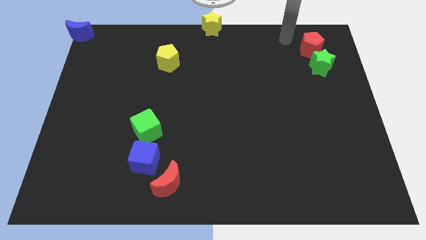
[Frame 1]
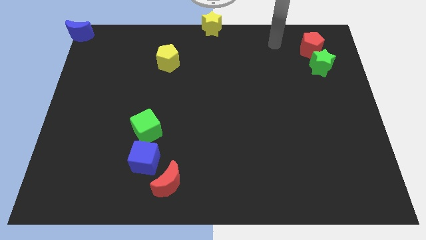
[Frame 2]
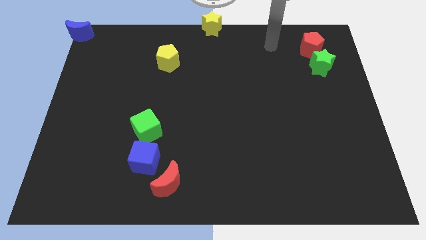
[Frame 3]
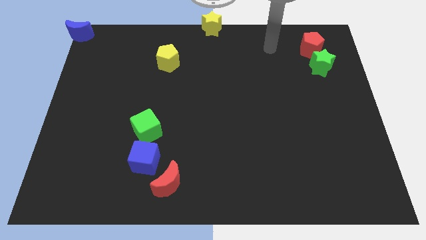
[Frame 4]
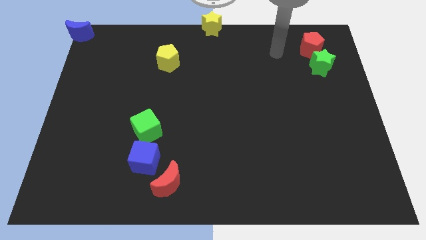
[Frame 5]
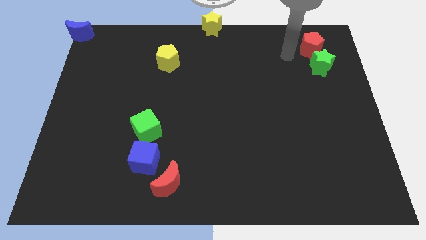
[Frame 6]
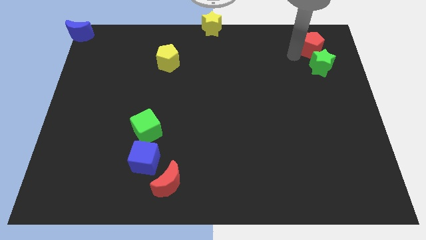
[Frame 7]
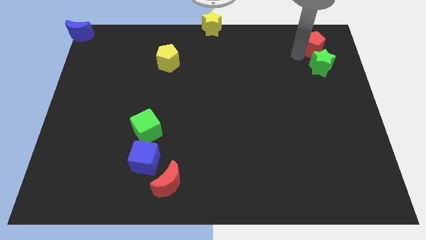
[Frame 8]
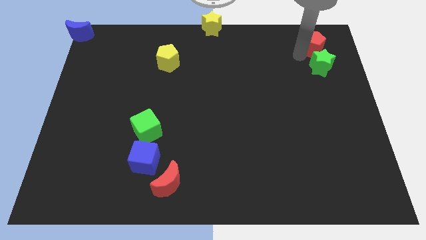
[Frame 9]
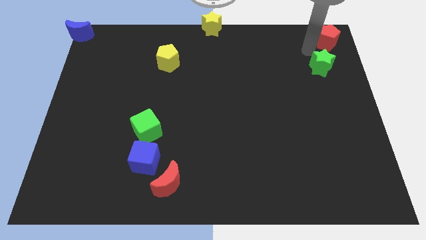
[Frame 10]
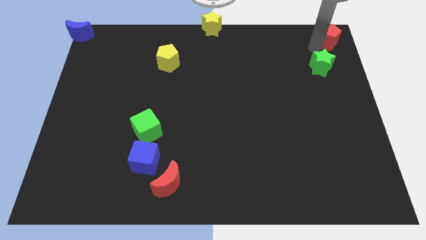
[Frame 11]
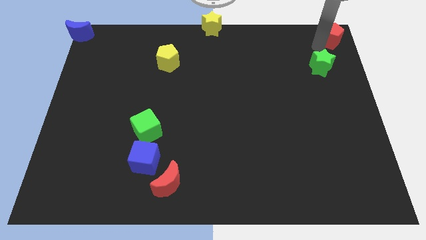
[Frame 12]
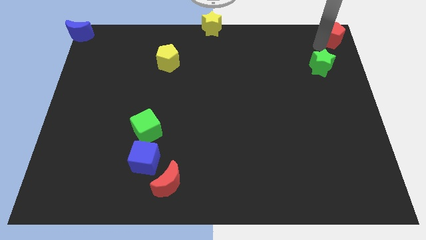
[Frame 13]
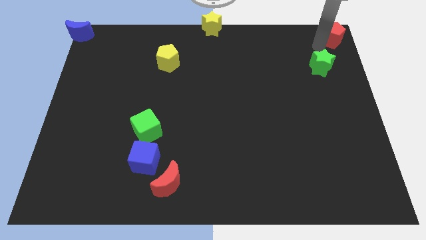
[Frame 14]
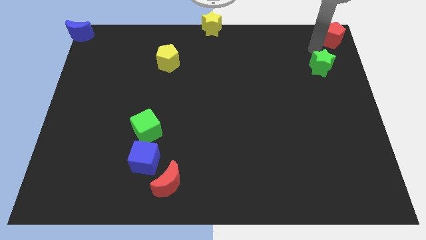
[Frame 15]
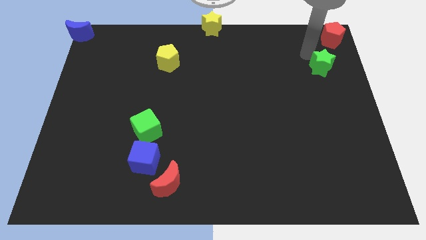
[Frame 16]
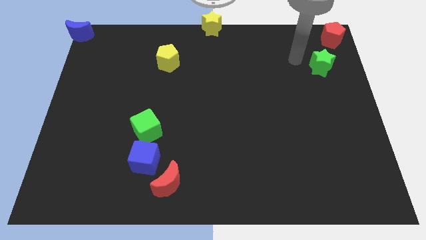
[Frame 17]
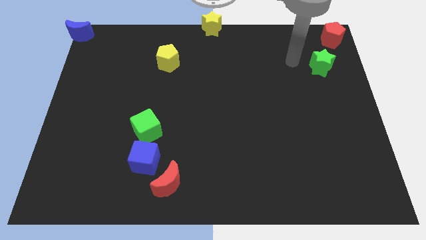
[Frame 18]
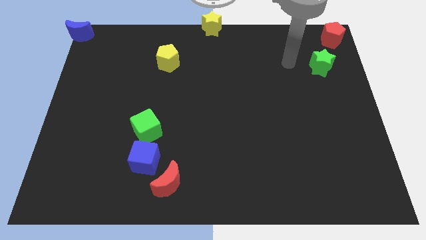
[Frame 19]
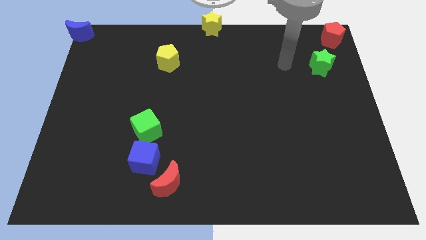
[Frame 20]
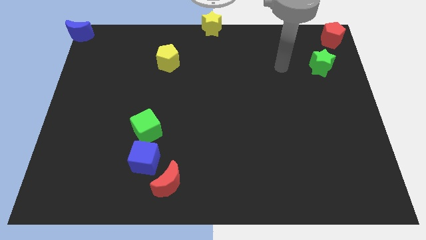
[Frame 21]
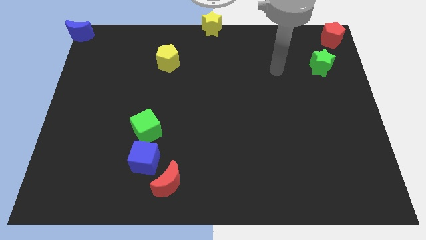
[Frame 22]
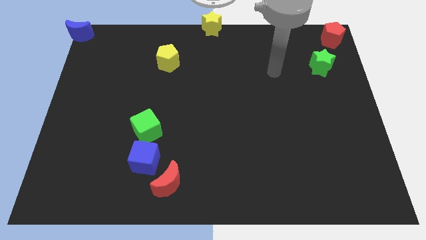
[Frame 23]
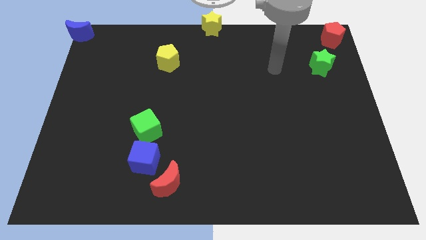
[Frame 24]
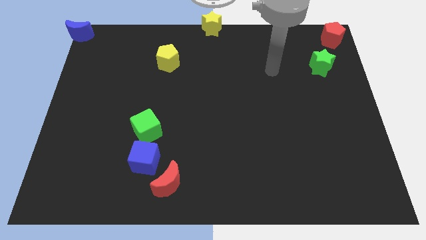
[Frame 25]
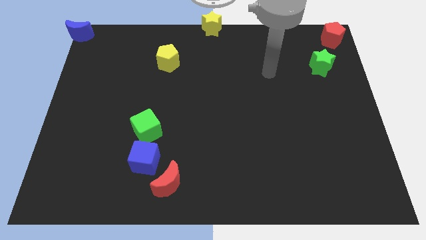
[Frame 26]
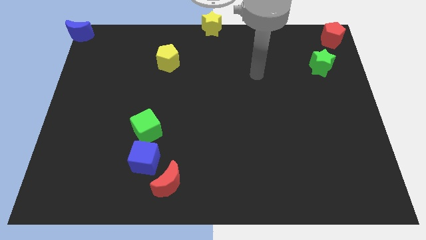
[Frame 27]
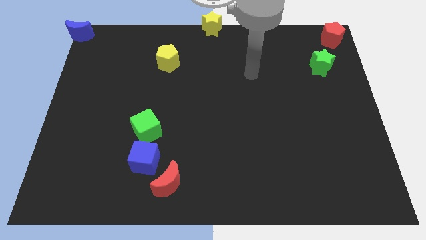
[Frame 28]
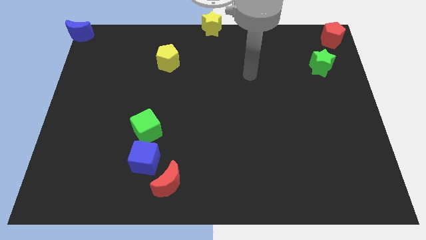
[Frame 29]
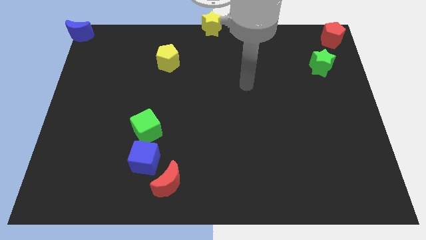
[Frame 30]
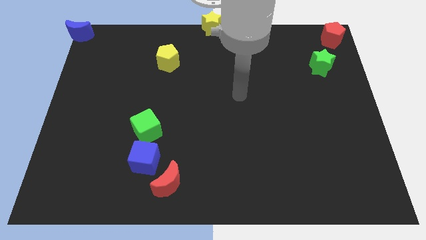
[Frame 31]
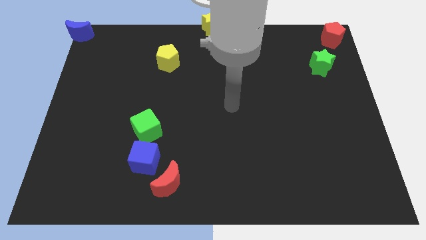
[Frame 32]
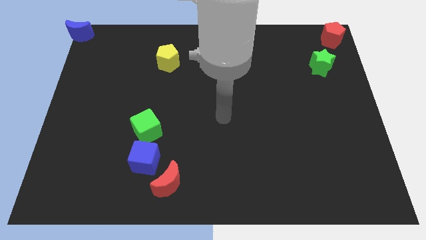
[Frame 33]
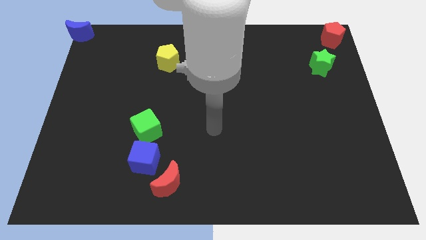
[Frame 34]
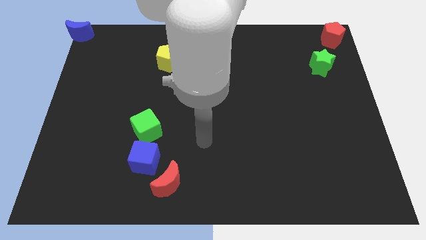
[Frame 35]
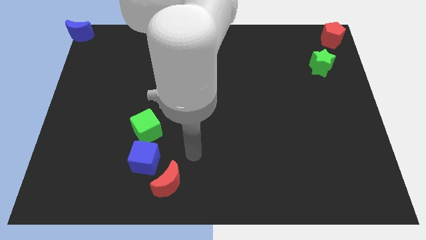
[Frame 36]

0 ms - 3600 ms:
place the red pentagon at the top right corner of the board

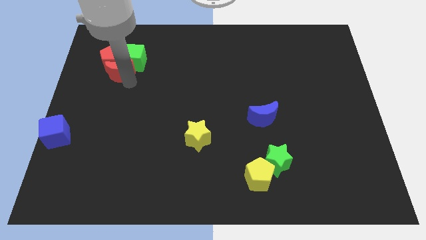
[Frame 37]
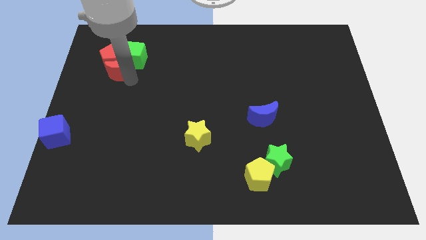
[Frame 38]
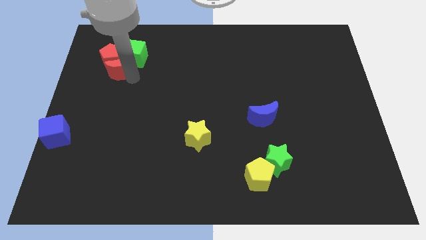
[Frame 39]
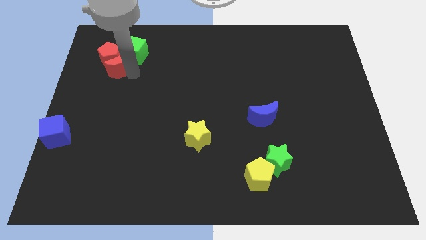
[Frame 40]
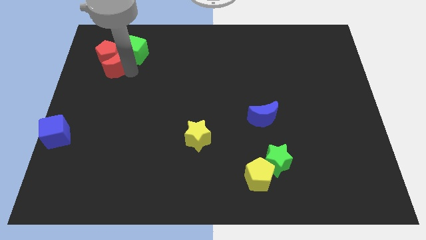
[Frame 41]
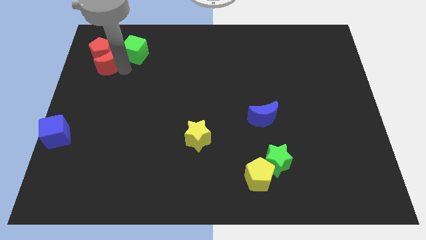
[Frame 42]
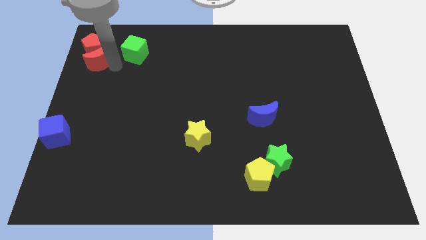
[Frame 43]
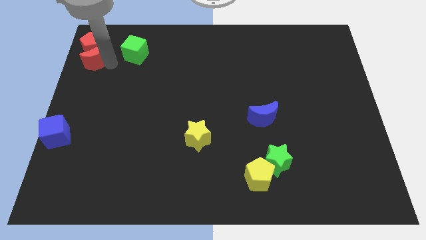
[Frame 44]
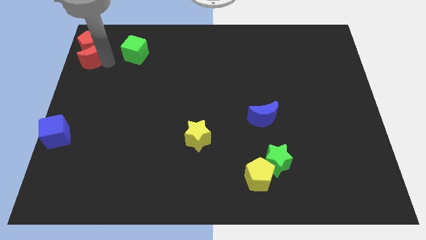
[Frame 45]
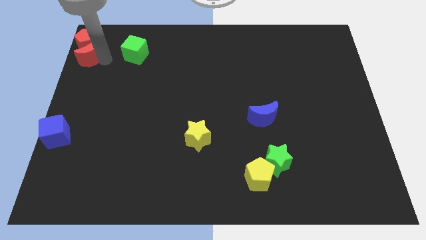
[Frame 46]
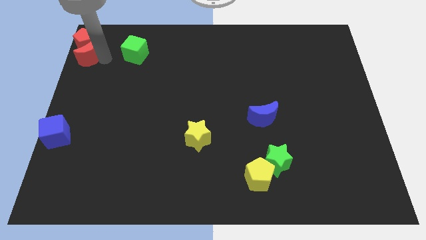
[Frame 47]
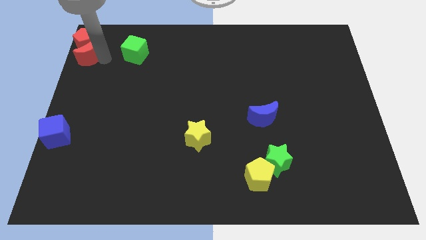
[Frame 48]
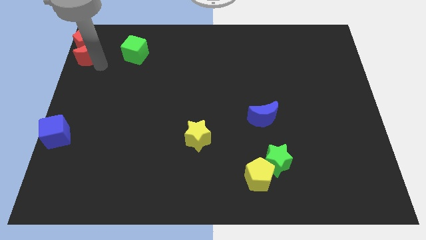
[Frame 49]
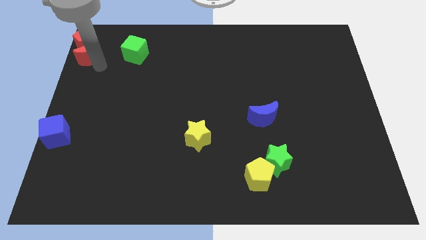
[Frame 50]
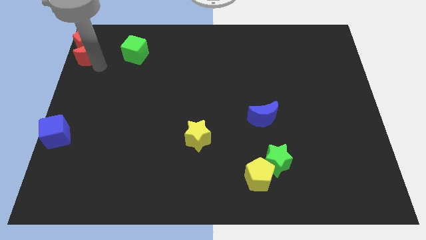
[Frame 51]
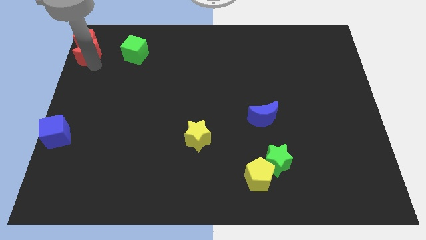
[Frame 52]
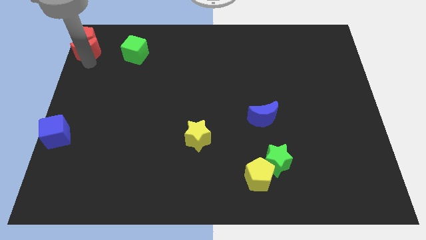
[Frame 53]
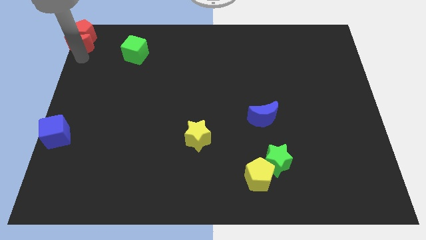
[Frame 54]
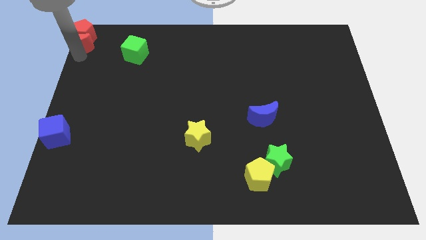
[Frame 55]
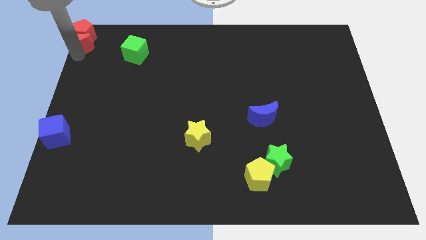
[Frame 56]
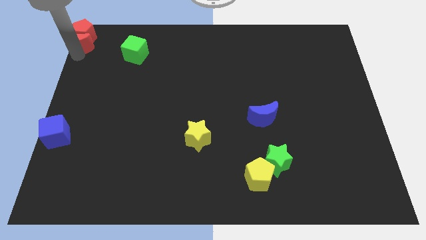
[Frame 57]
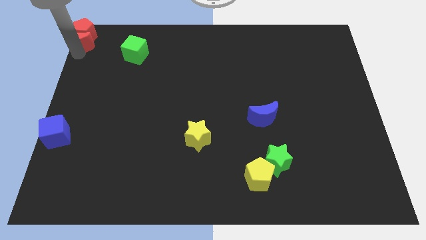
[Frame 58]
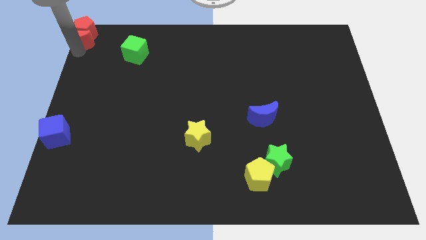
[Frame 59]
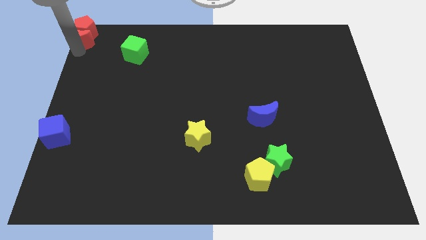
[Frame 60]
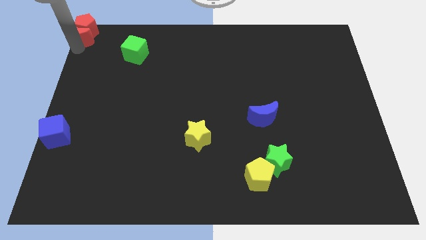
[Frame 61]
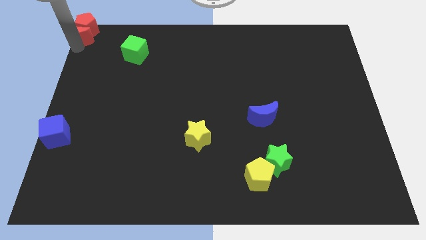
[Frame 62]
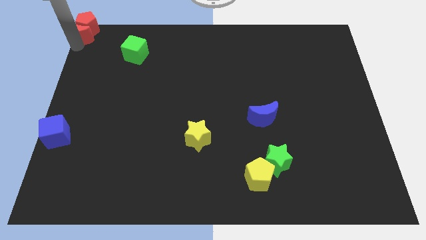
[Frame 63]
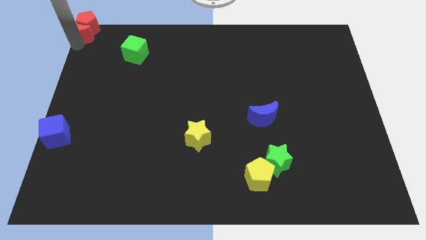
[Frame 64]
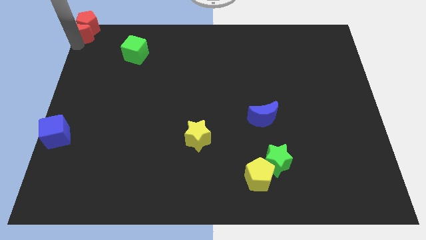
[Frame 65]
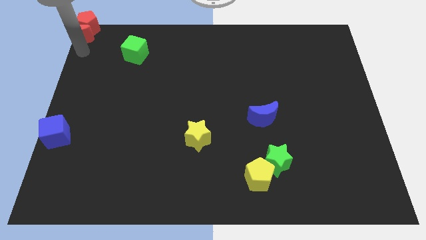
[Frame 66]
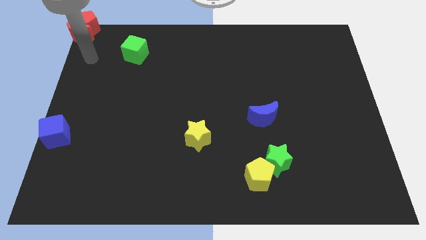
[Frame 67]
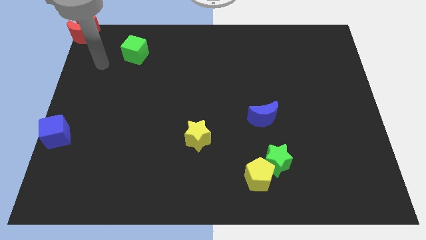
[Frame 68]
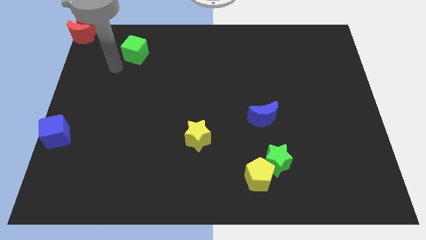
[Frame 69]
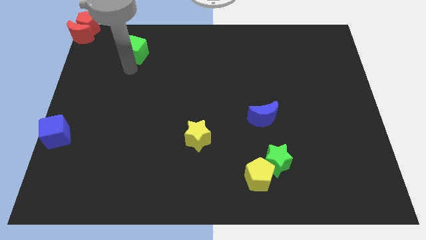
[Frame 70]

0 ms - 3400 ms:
move the red crescent along with the red pentagon to the top left of the board

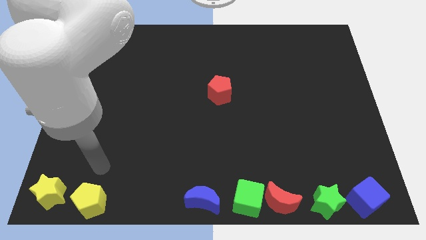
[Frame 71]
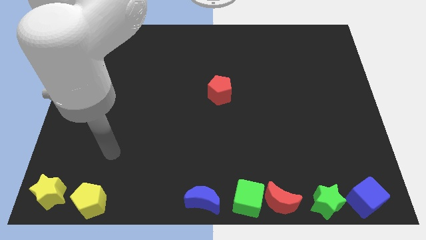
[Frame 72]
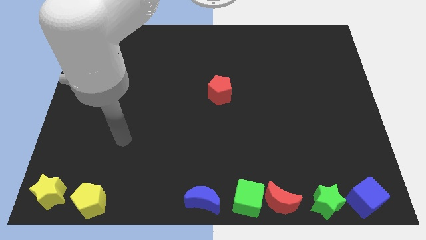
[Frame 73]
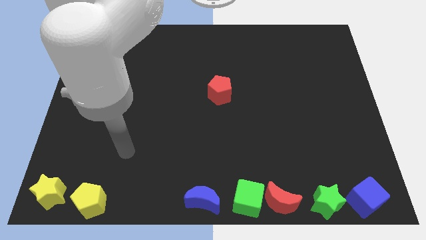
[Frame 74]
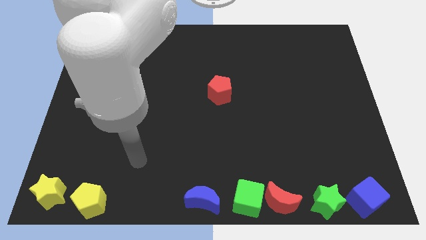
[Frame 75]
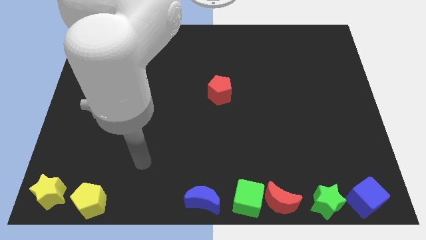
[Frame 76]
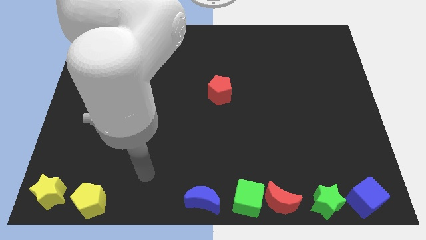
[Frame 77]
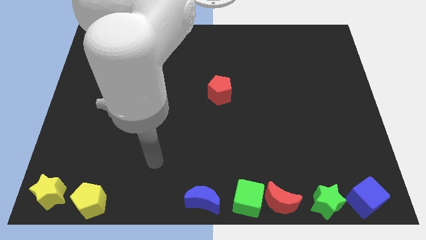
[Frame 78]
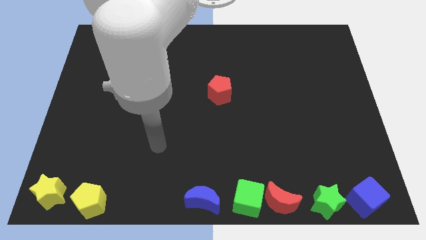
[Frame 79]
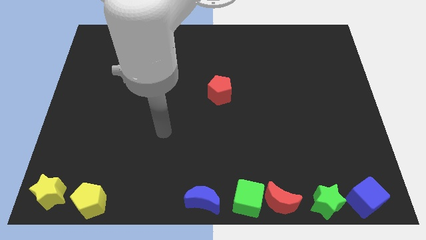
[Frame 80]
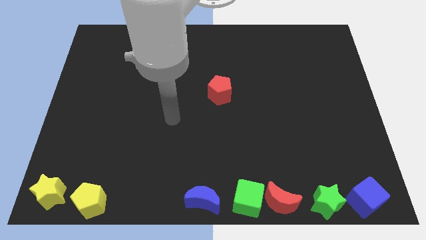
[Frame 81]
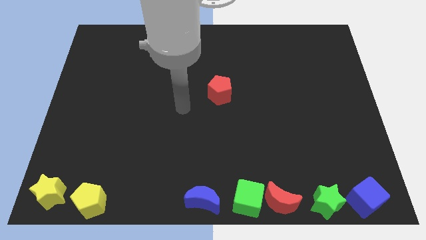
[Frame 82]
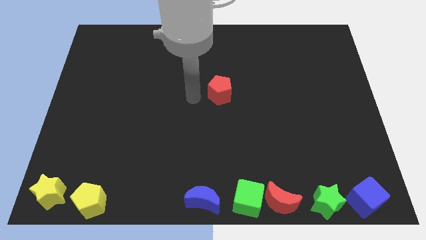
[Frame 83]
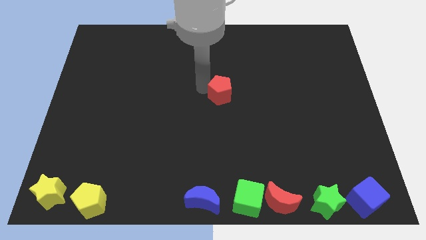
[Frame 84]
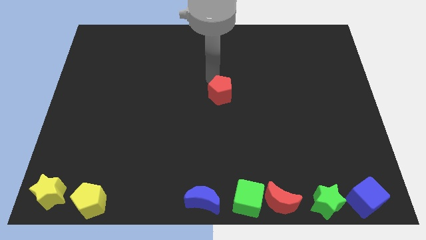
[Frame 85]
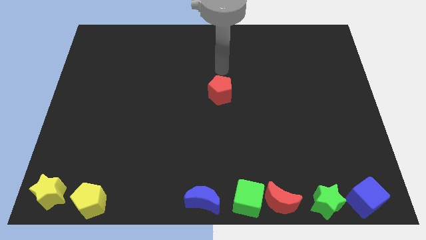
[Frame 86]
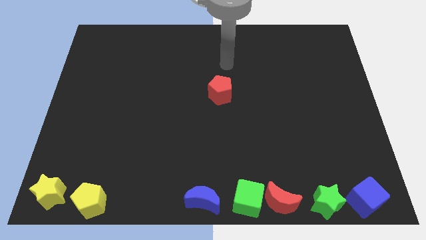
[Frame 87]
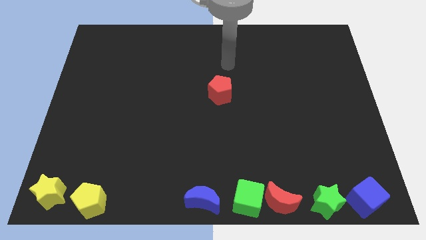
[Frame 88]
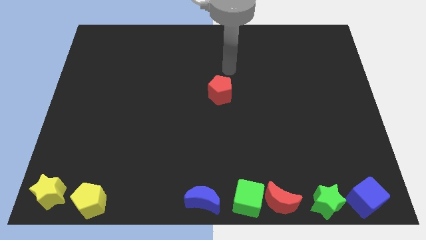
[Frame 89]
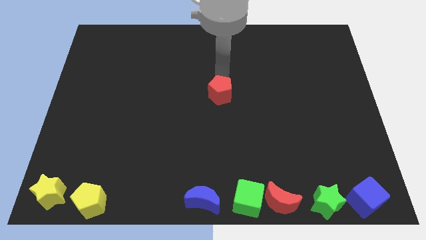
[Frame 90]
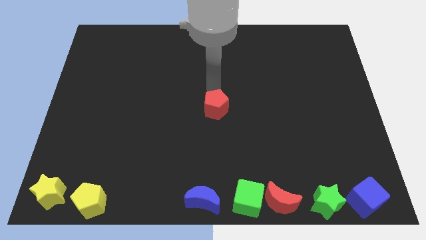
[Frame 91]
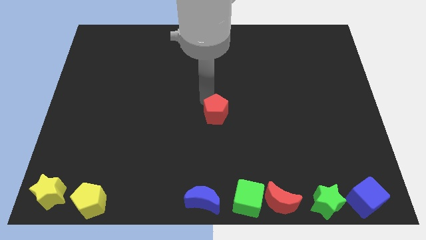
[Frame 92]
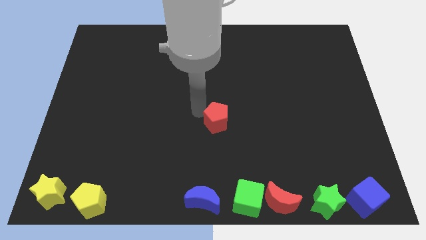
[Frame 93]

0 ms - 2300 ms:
move your arm away from the yellow pentagon
